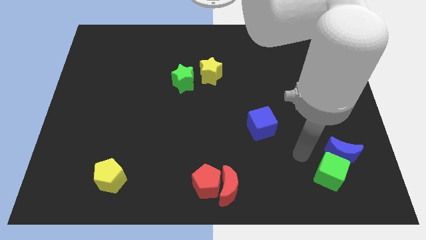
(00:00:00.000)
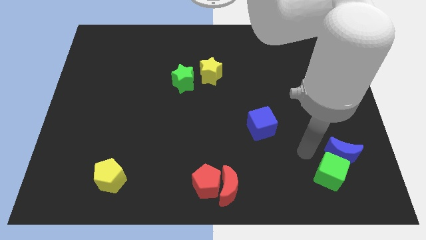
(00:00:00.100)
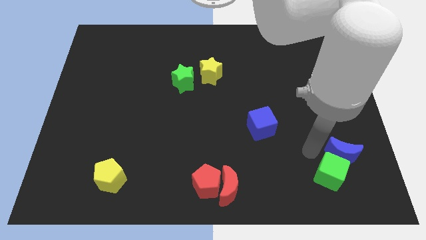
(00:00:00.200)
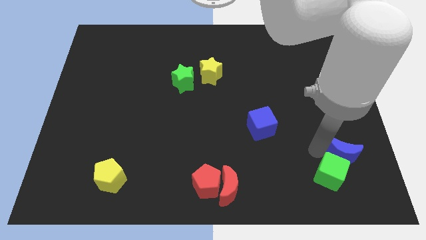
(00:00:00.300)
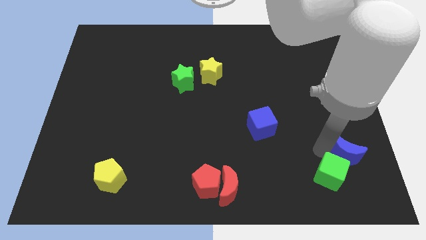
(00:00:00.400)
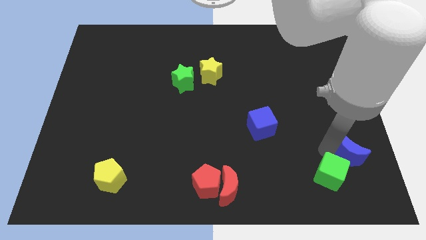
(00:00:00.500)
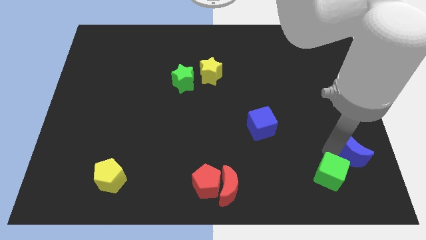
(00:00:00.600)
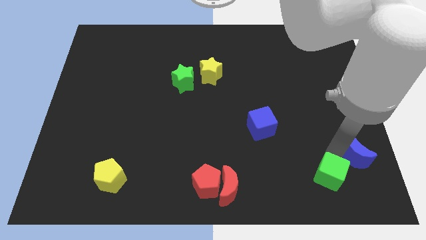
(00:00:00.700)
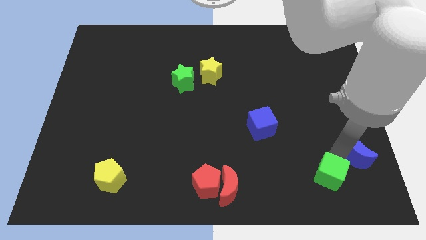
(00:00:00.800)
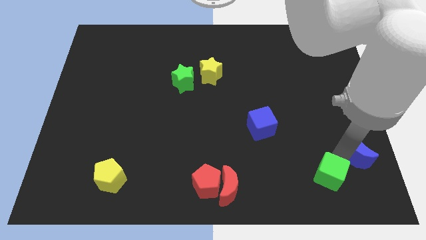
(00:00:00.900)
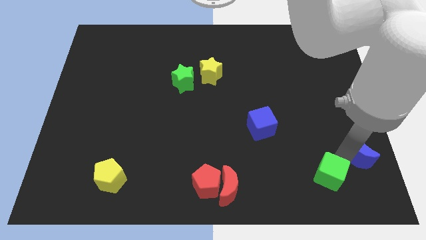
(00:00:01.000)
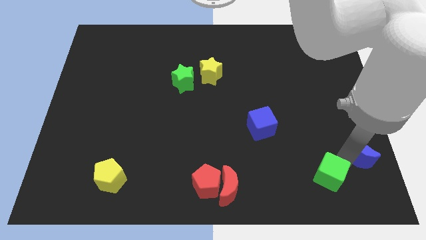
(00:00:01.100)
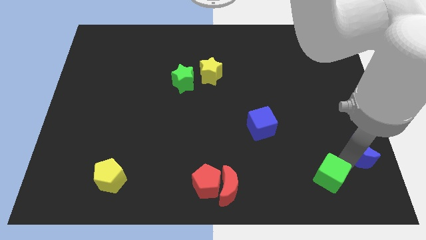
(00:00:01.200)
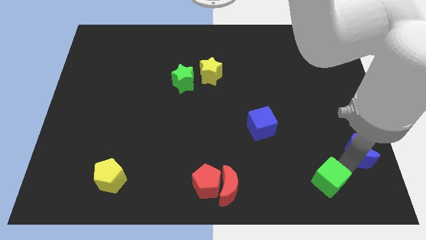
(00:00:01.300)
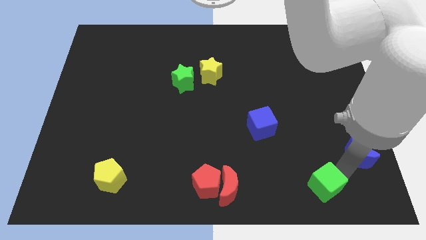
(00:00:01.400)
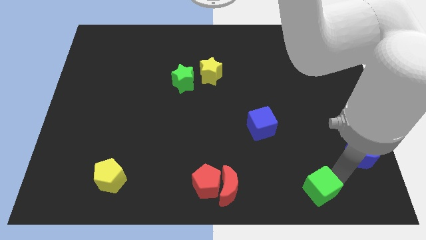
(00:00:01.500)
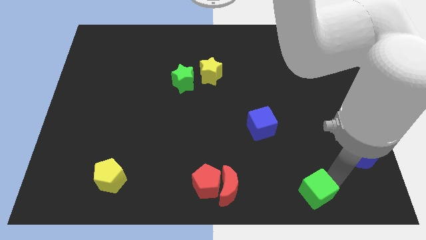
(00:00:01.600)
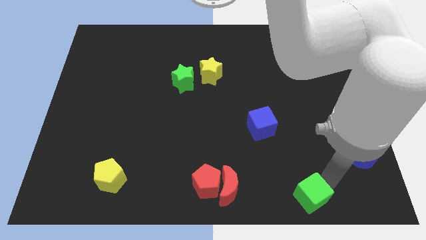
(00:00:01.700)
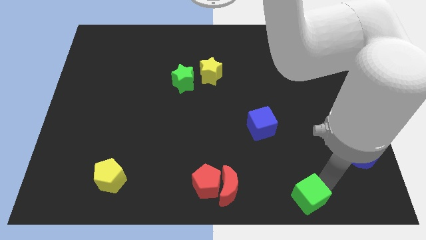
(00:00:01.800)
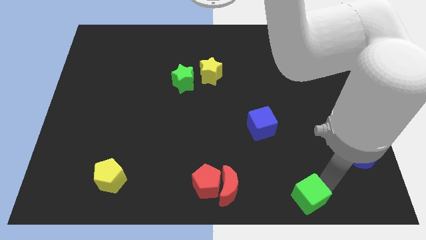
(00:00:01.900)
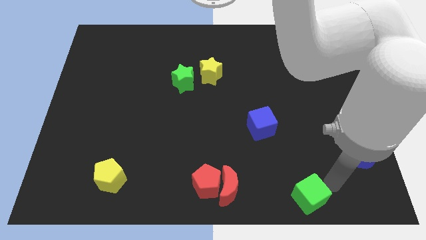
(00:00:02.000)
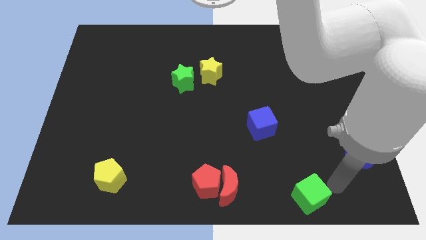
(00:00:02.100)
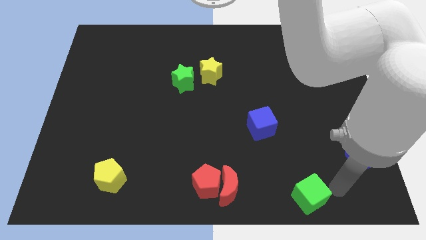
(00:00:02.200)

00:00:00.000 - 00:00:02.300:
separate blue crescent and green cube

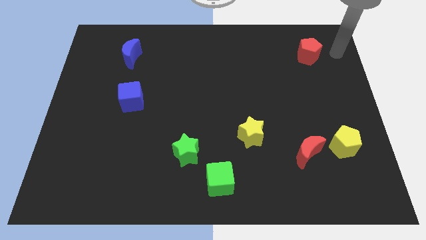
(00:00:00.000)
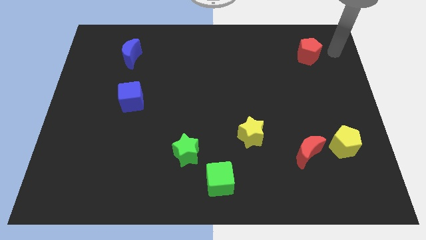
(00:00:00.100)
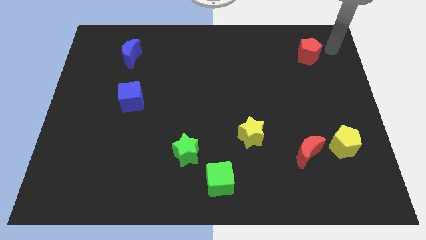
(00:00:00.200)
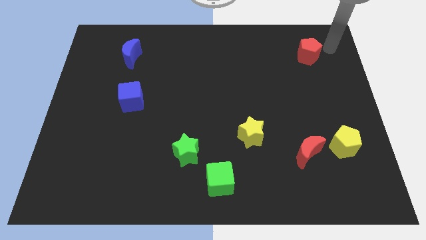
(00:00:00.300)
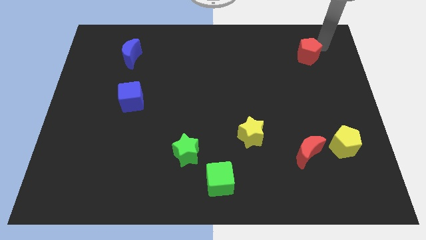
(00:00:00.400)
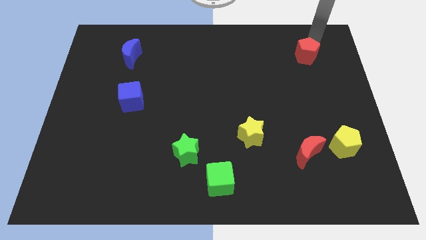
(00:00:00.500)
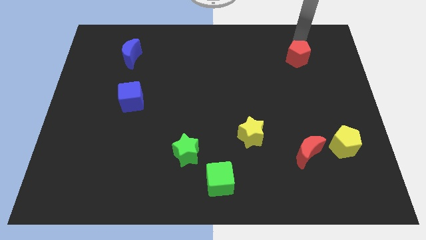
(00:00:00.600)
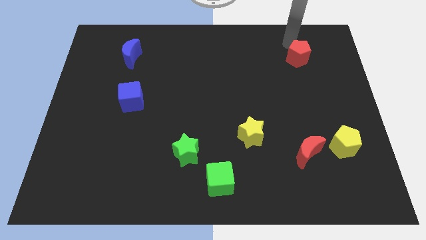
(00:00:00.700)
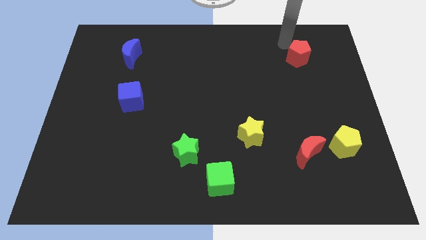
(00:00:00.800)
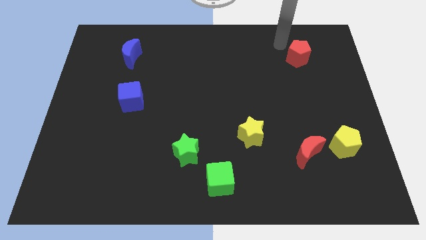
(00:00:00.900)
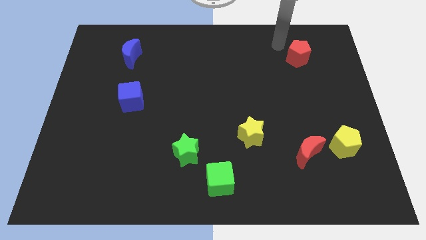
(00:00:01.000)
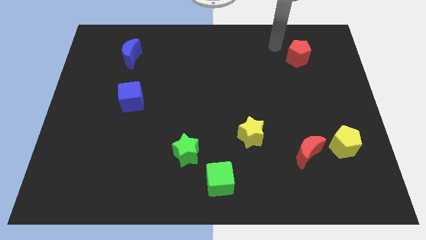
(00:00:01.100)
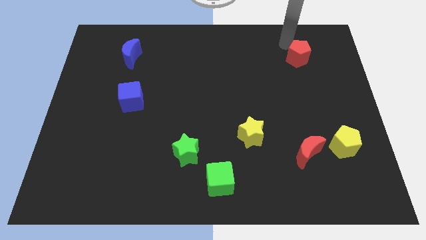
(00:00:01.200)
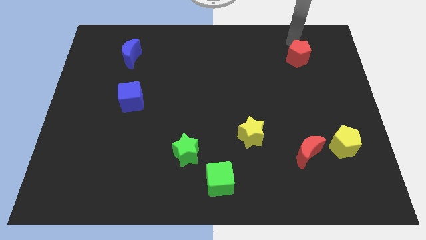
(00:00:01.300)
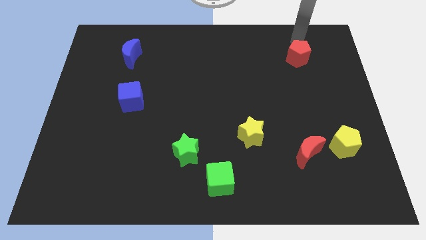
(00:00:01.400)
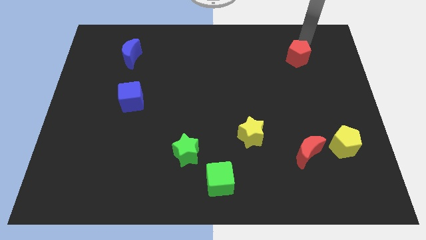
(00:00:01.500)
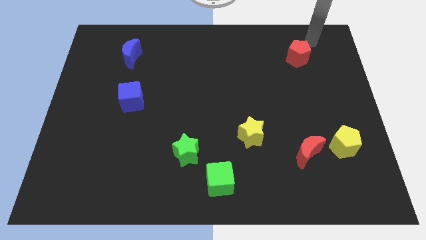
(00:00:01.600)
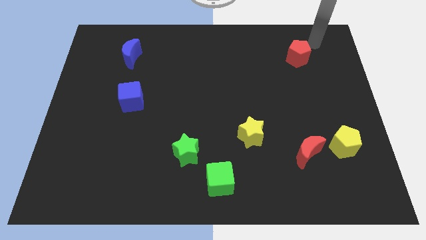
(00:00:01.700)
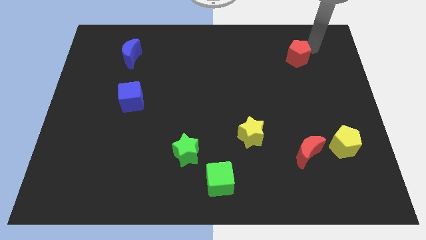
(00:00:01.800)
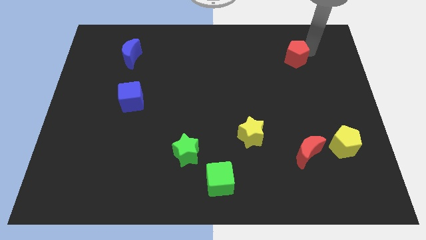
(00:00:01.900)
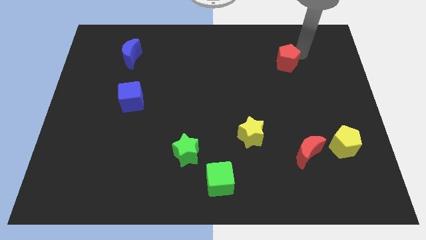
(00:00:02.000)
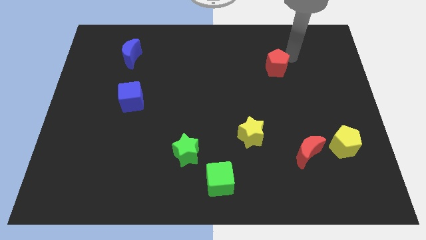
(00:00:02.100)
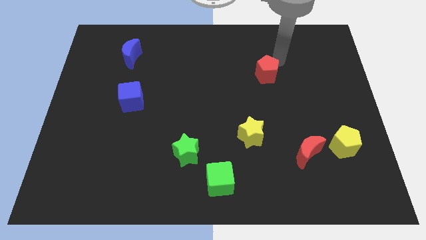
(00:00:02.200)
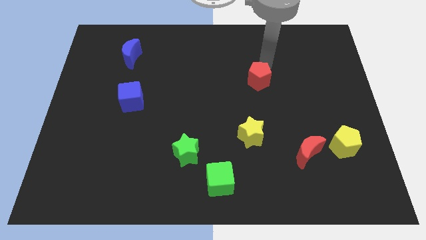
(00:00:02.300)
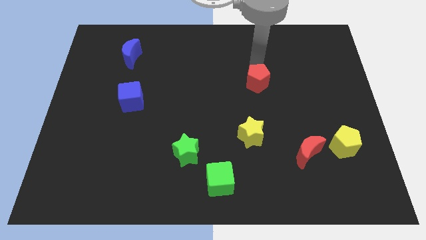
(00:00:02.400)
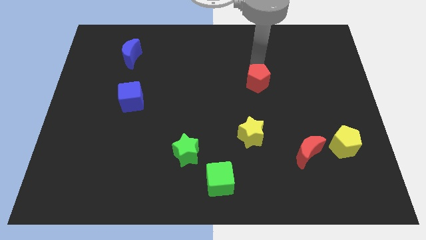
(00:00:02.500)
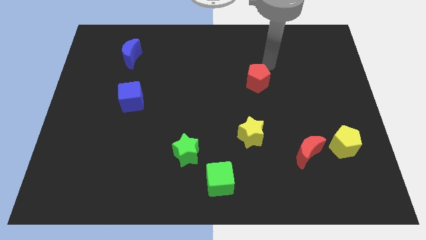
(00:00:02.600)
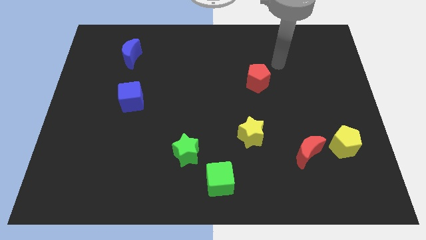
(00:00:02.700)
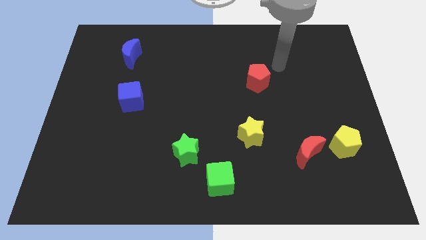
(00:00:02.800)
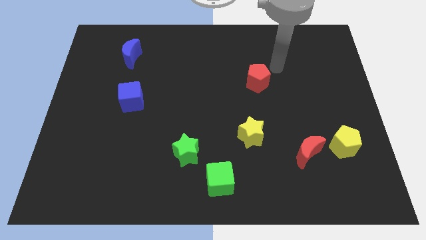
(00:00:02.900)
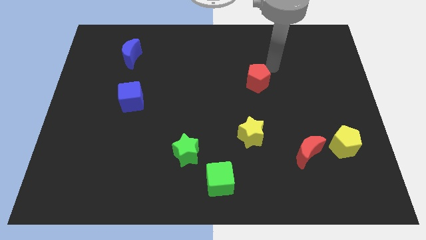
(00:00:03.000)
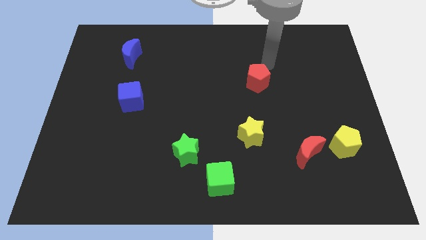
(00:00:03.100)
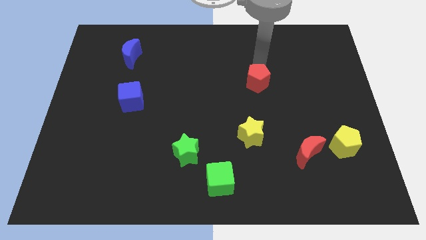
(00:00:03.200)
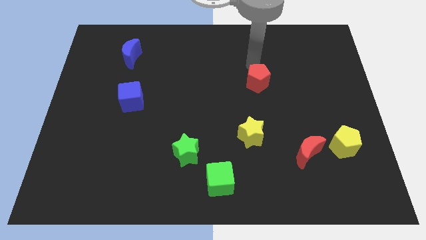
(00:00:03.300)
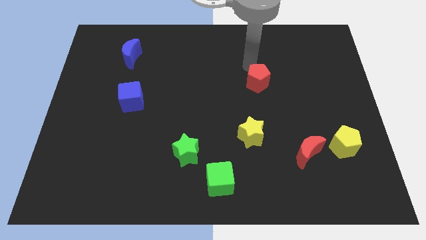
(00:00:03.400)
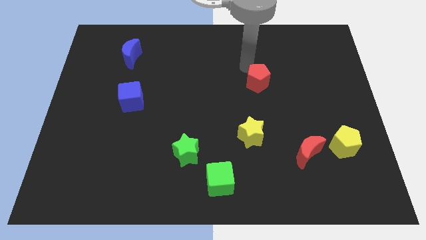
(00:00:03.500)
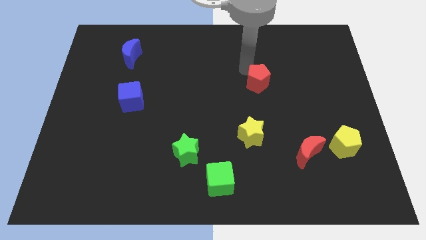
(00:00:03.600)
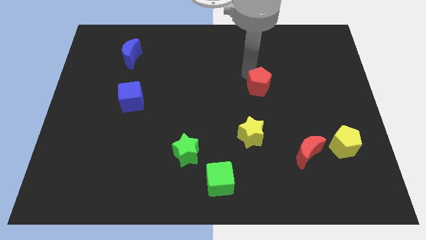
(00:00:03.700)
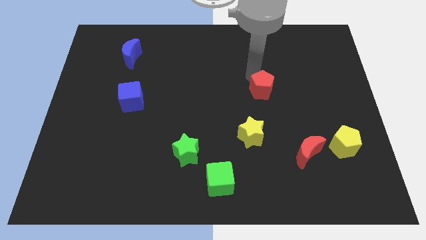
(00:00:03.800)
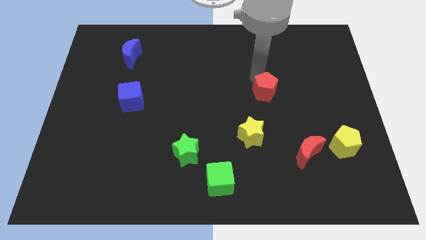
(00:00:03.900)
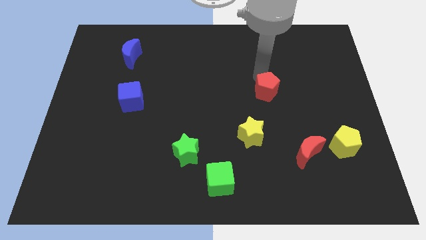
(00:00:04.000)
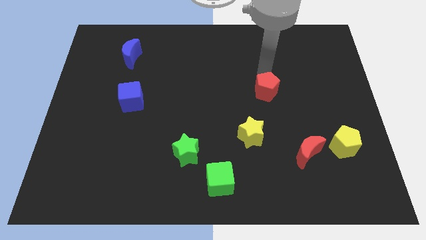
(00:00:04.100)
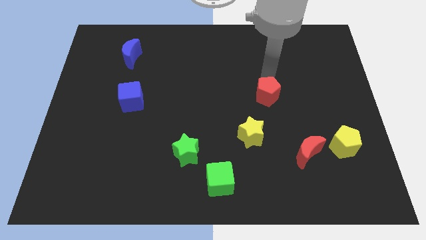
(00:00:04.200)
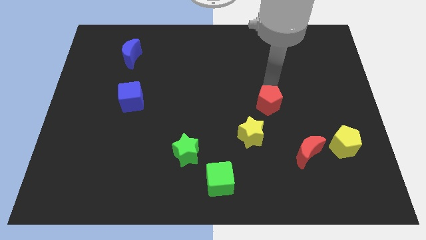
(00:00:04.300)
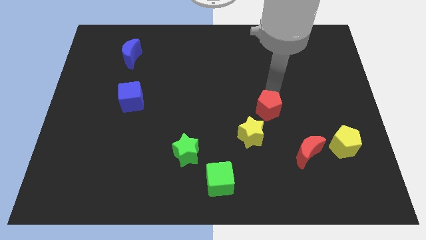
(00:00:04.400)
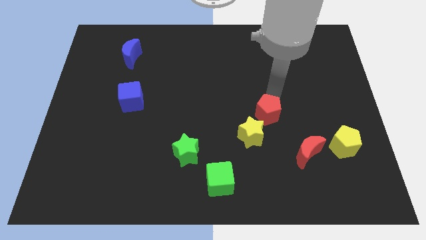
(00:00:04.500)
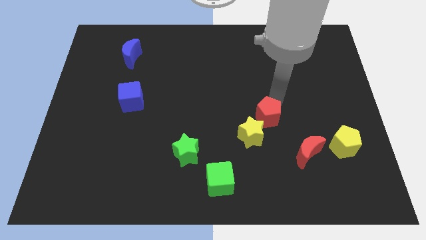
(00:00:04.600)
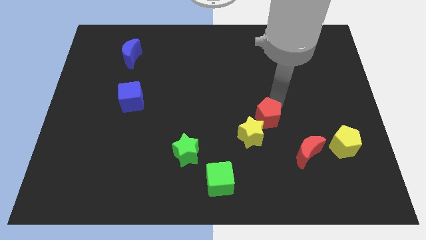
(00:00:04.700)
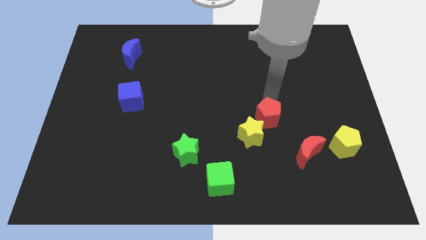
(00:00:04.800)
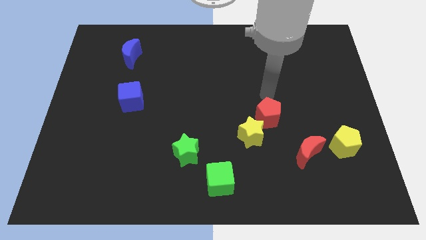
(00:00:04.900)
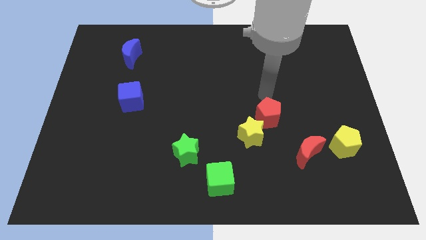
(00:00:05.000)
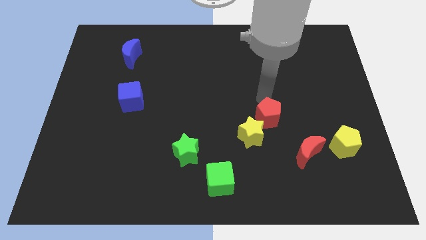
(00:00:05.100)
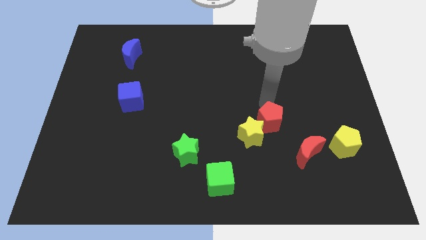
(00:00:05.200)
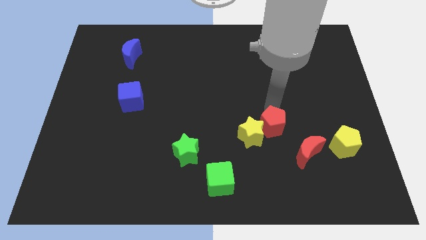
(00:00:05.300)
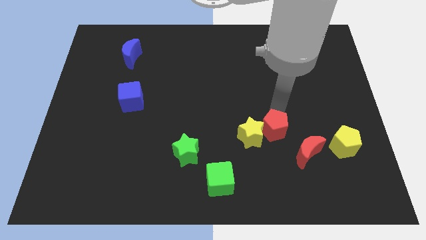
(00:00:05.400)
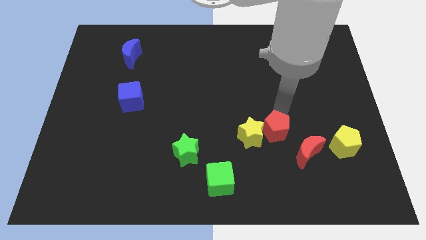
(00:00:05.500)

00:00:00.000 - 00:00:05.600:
push the red pentagon into the yellow star

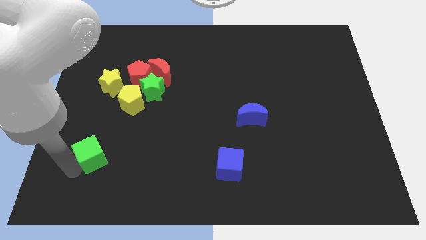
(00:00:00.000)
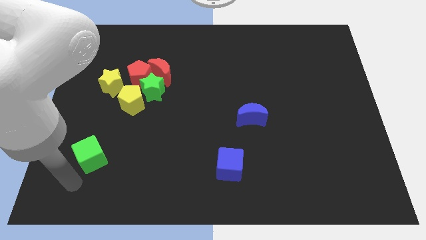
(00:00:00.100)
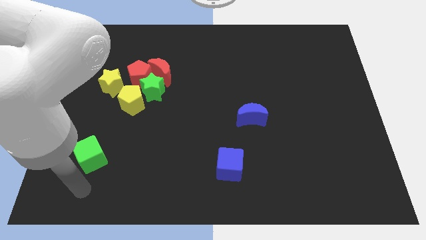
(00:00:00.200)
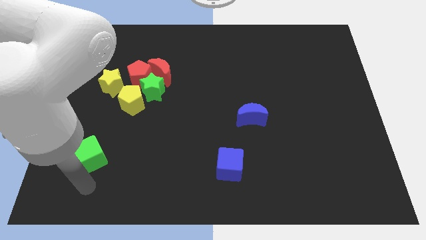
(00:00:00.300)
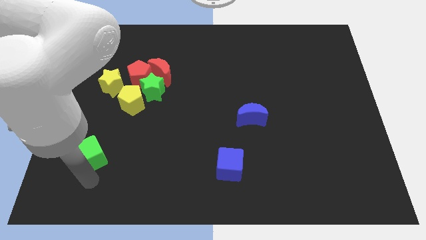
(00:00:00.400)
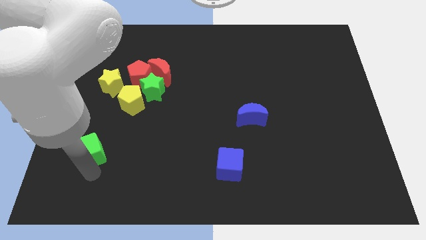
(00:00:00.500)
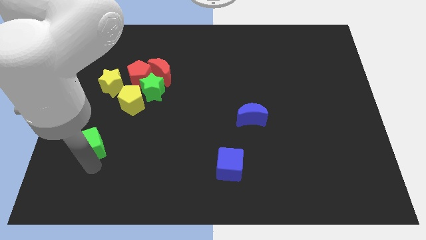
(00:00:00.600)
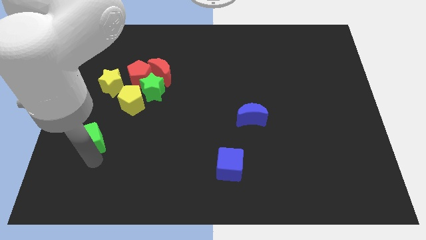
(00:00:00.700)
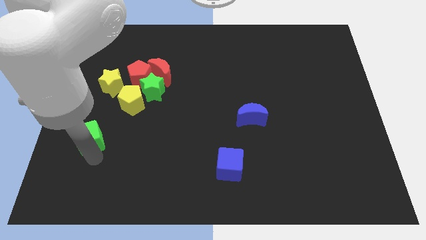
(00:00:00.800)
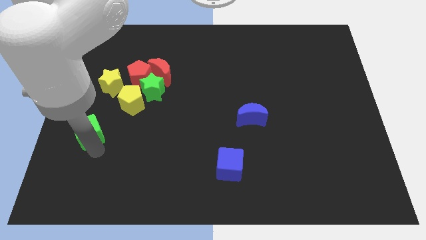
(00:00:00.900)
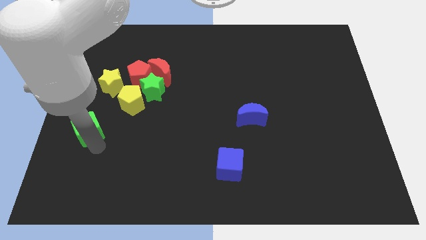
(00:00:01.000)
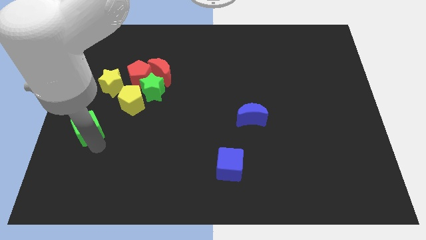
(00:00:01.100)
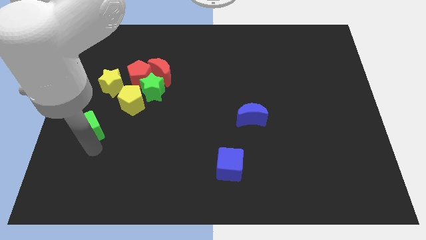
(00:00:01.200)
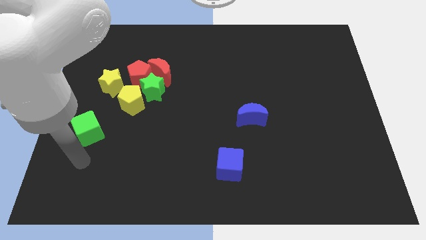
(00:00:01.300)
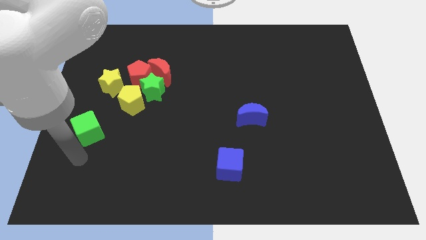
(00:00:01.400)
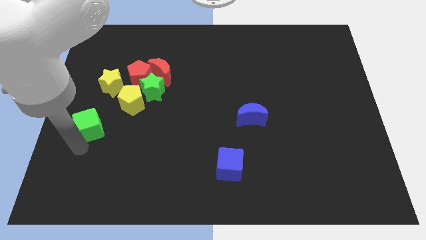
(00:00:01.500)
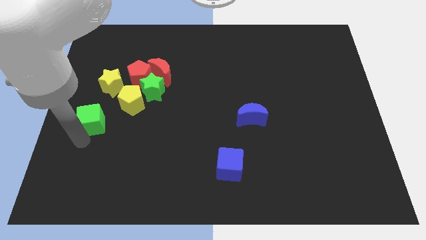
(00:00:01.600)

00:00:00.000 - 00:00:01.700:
push the green cube towards the group of blocks
